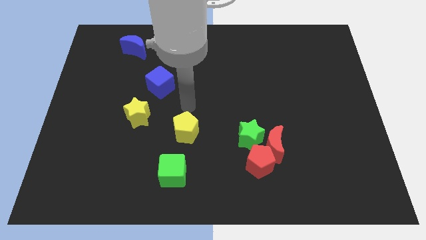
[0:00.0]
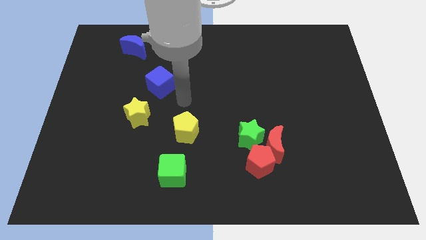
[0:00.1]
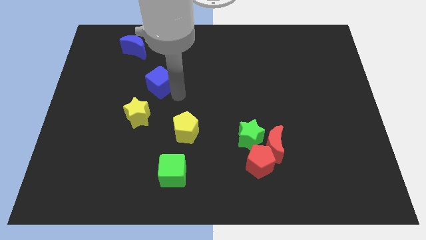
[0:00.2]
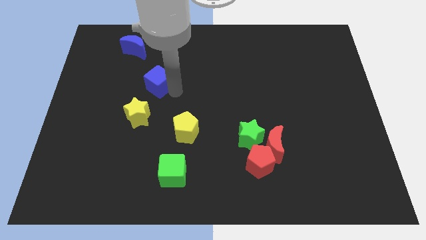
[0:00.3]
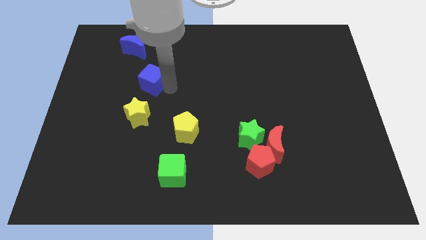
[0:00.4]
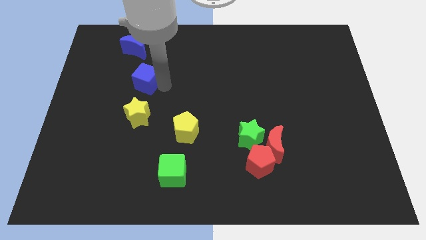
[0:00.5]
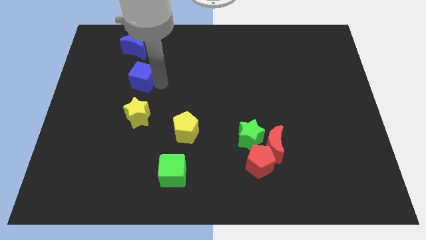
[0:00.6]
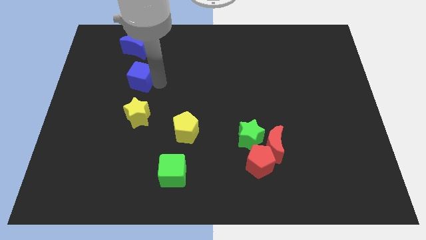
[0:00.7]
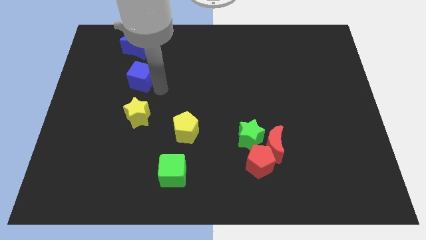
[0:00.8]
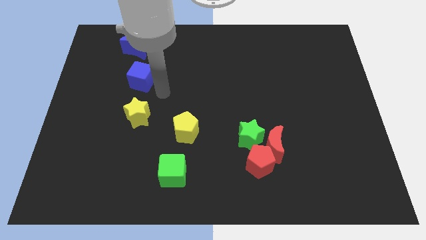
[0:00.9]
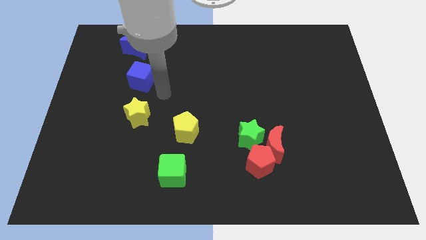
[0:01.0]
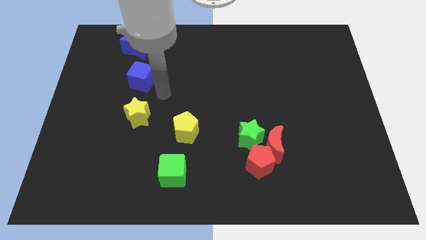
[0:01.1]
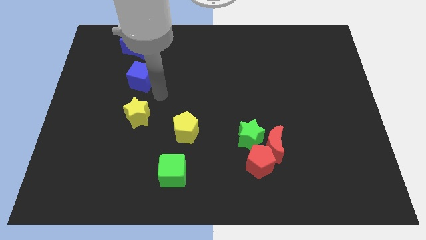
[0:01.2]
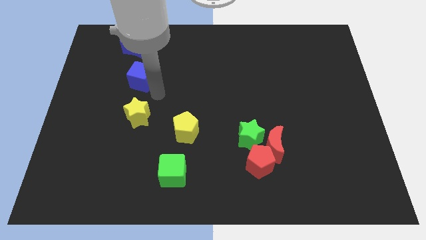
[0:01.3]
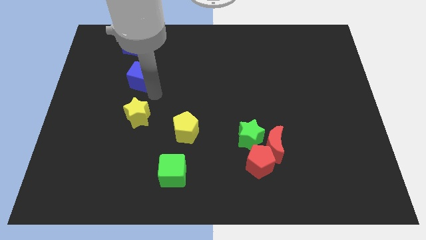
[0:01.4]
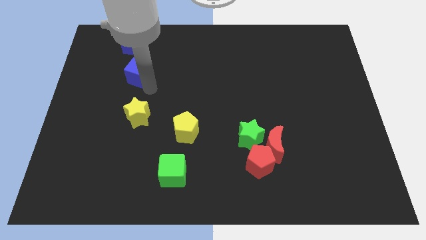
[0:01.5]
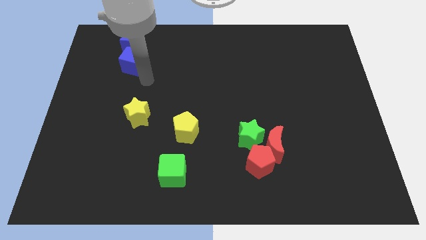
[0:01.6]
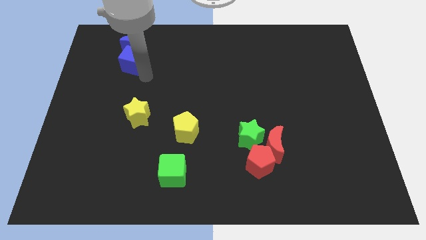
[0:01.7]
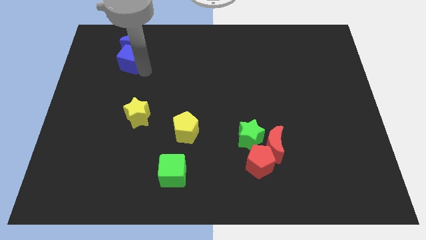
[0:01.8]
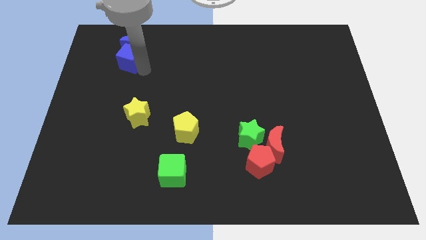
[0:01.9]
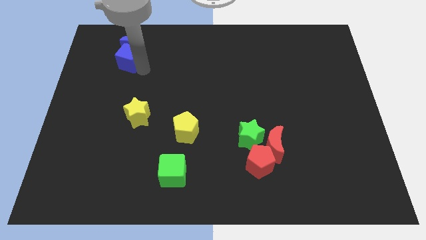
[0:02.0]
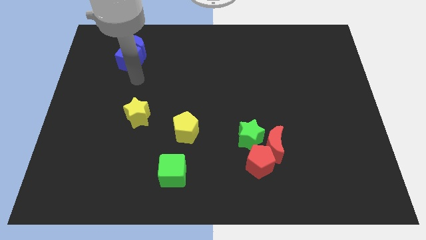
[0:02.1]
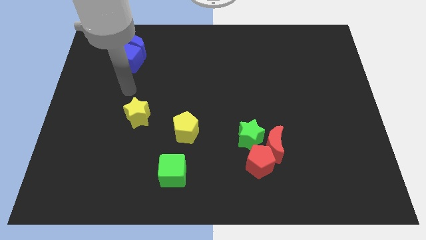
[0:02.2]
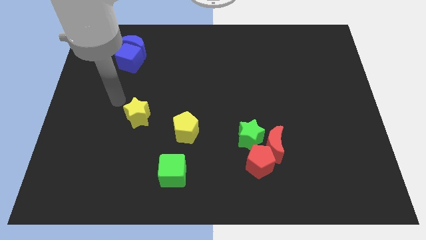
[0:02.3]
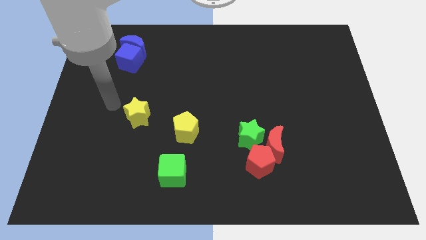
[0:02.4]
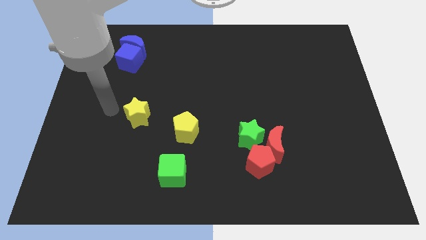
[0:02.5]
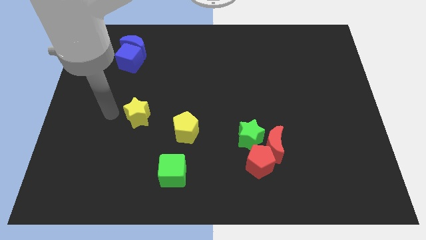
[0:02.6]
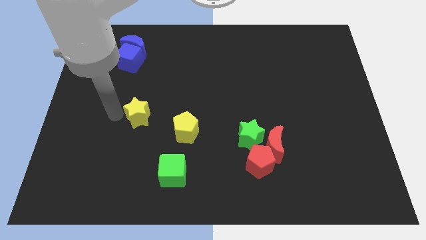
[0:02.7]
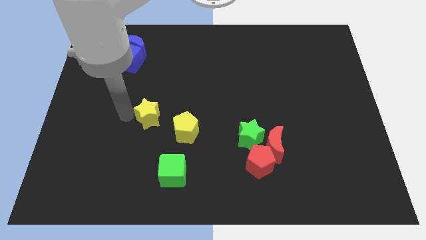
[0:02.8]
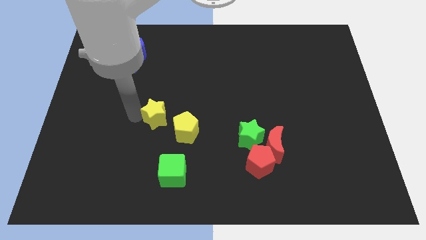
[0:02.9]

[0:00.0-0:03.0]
place the blue cube close to the blue crescent

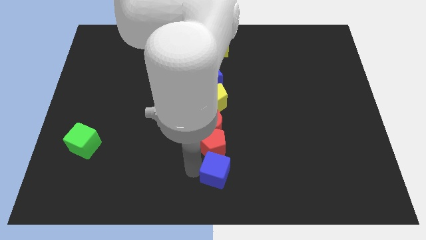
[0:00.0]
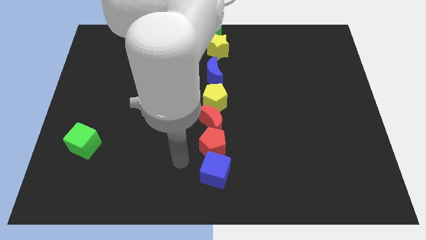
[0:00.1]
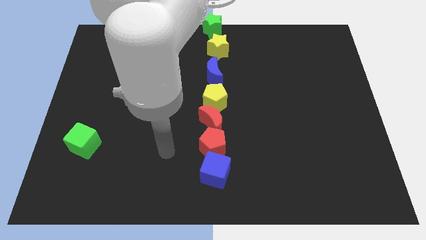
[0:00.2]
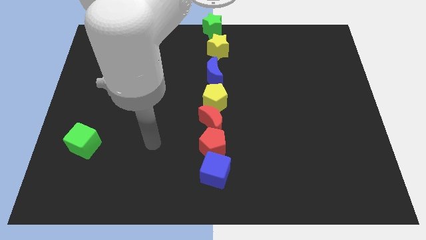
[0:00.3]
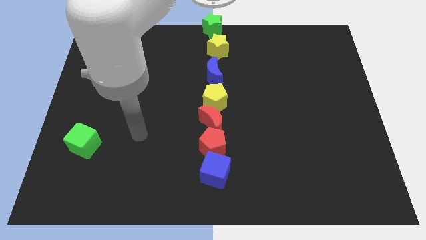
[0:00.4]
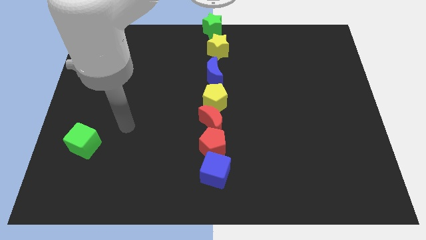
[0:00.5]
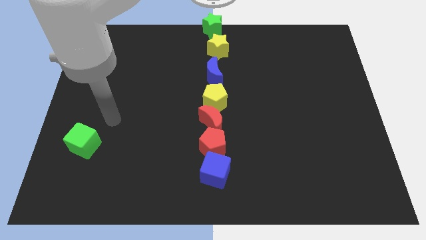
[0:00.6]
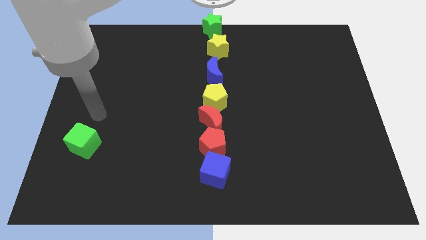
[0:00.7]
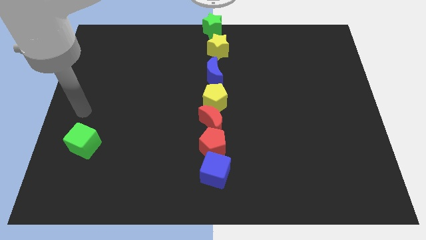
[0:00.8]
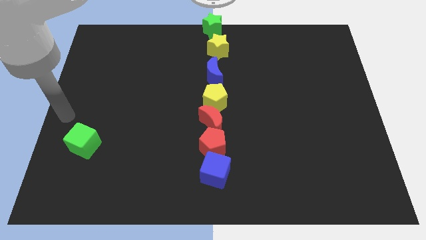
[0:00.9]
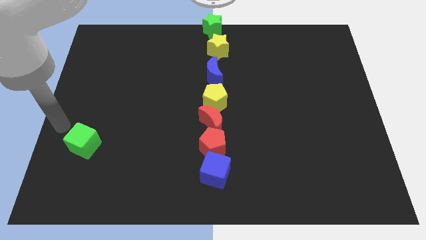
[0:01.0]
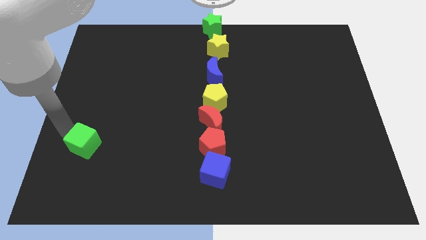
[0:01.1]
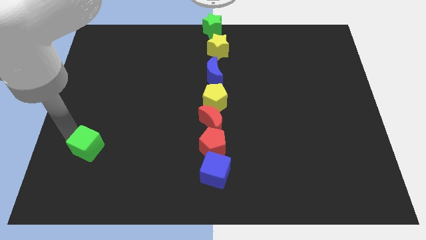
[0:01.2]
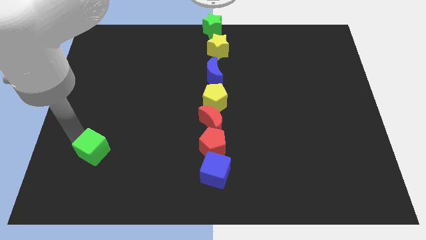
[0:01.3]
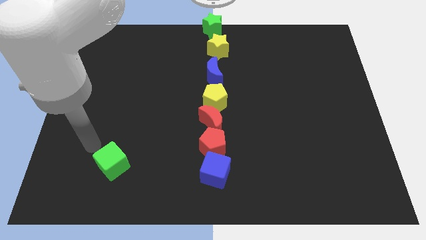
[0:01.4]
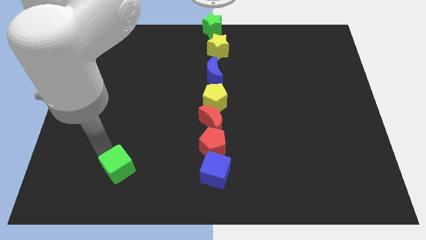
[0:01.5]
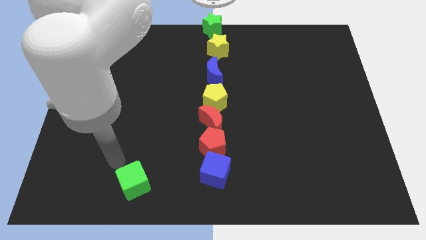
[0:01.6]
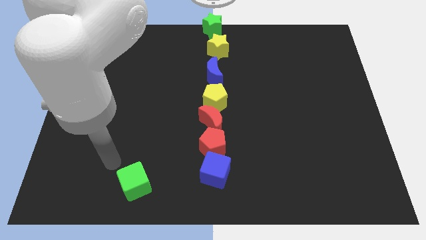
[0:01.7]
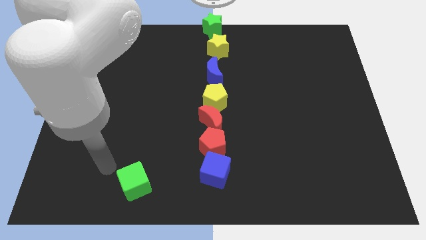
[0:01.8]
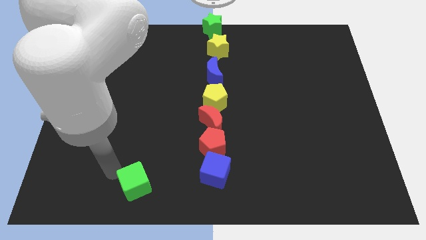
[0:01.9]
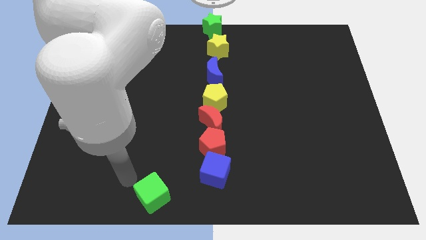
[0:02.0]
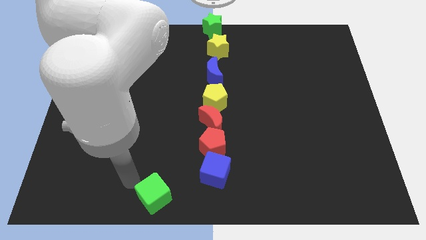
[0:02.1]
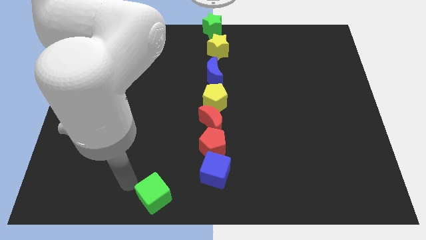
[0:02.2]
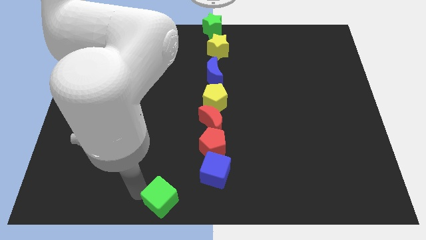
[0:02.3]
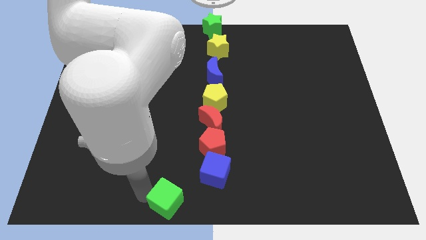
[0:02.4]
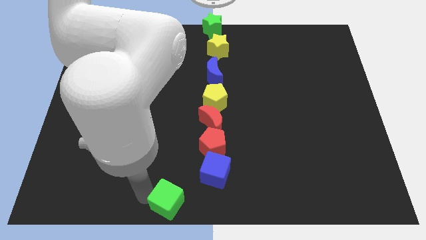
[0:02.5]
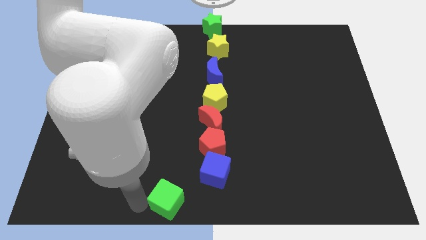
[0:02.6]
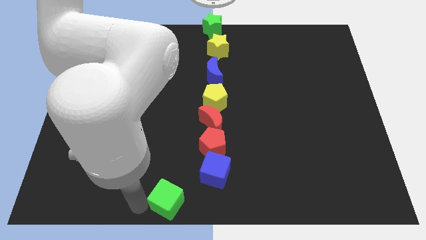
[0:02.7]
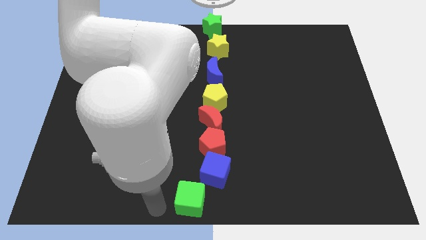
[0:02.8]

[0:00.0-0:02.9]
put the green cube at the bottom left side of blue cube

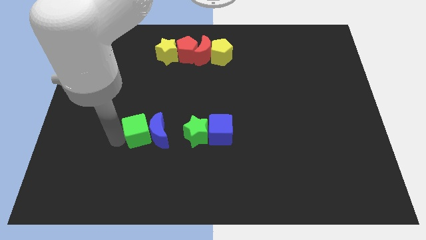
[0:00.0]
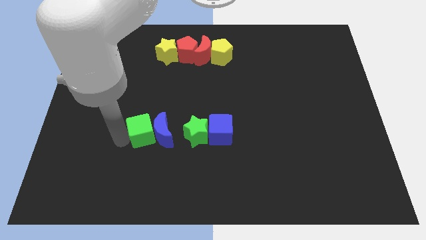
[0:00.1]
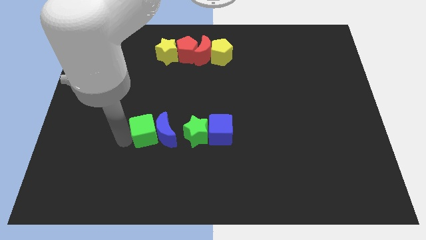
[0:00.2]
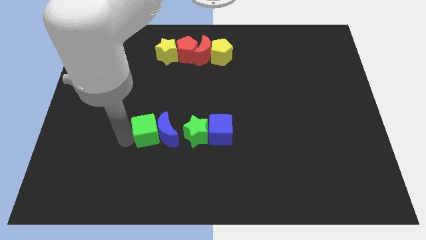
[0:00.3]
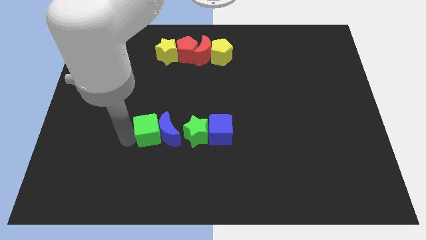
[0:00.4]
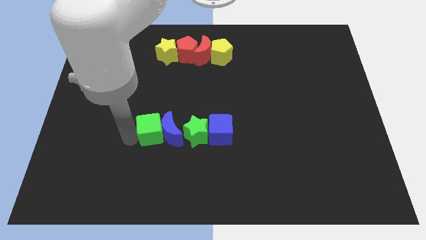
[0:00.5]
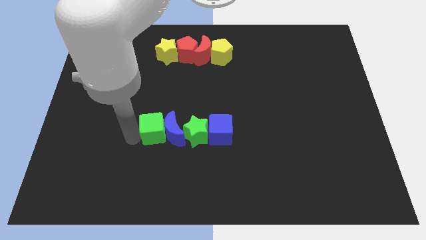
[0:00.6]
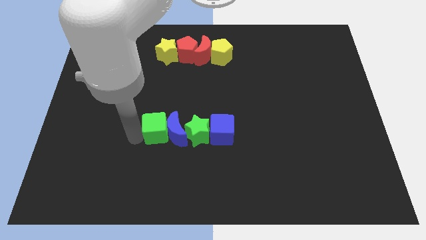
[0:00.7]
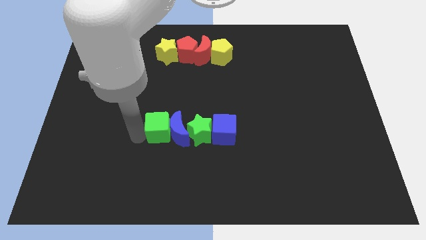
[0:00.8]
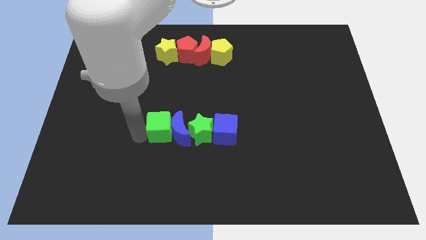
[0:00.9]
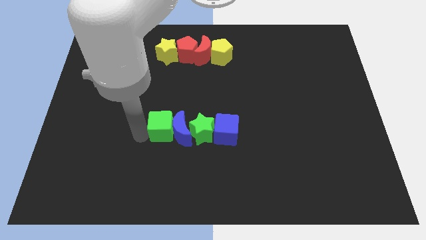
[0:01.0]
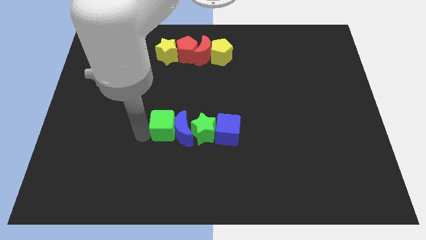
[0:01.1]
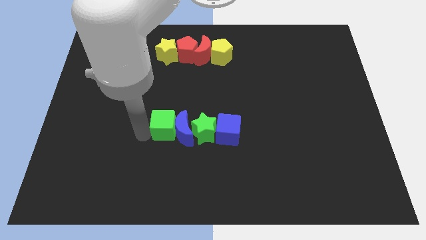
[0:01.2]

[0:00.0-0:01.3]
push green cube and blue moon into the green star at middle of the board

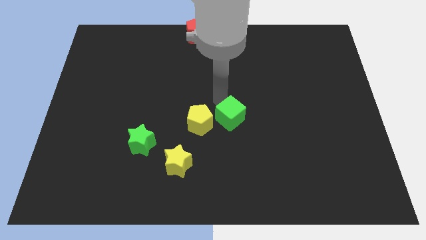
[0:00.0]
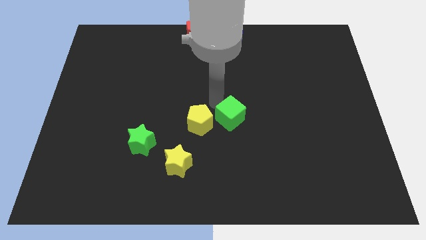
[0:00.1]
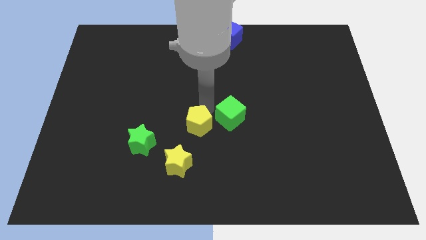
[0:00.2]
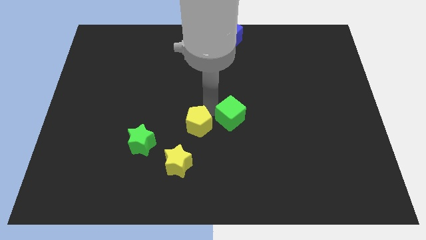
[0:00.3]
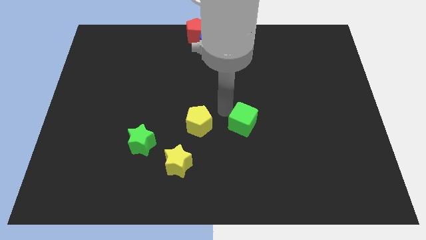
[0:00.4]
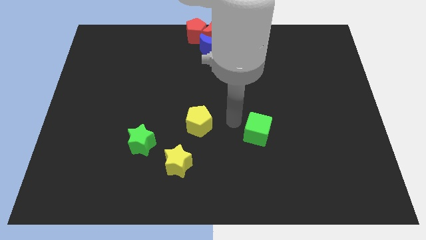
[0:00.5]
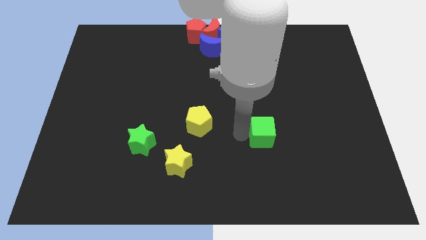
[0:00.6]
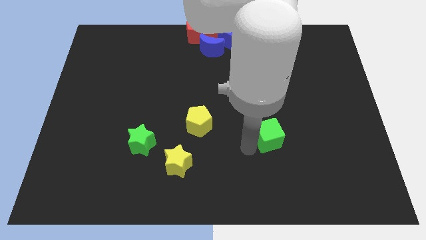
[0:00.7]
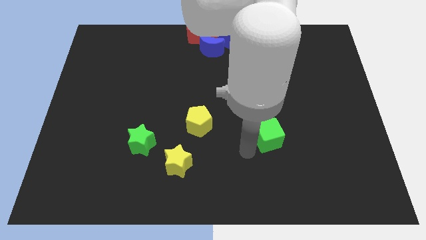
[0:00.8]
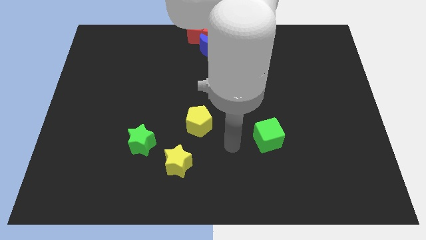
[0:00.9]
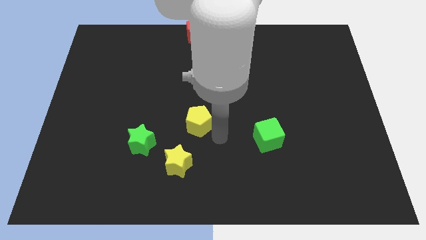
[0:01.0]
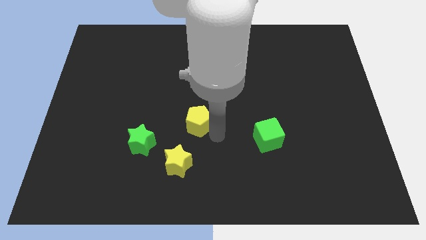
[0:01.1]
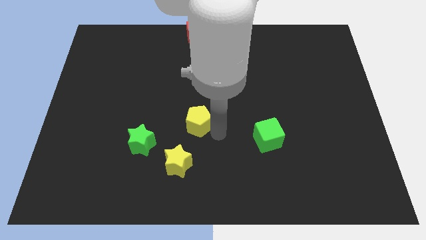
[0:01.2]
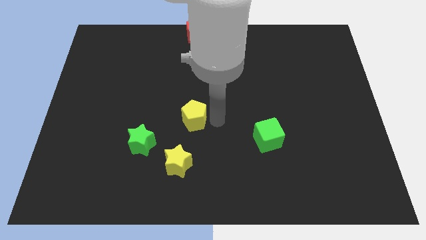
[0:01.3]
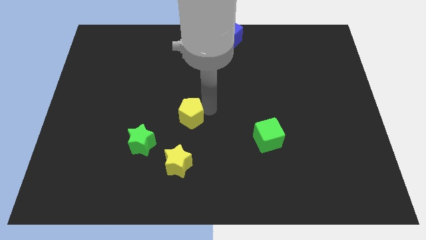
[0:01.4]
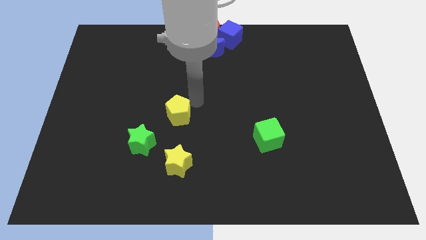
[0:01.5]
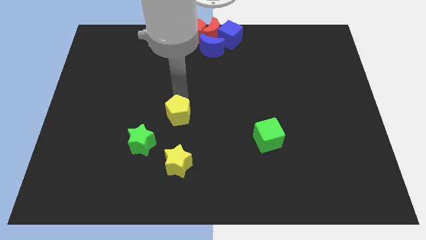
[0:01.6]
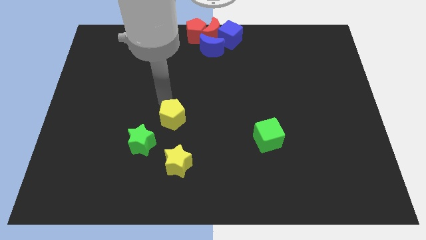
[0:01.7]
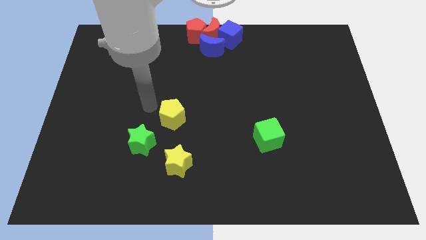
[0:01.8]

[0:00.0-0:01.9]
move yellow pentagon and the green cube away from each other
